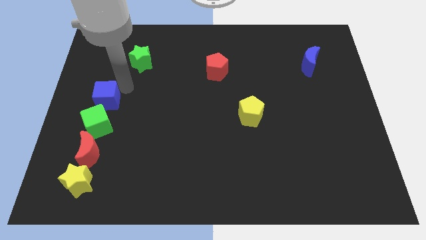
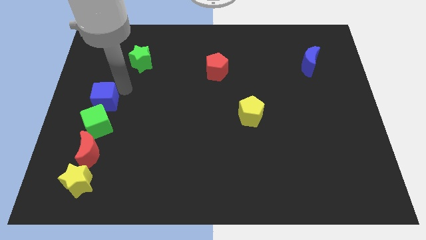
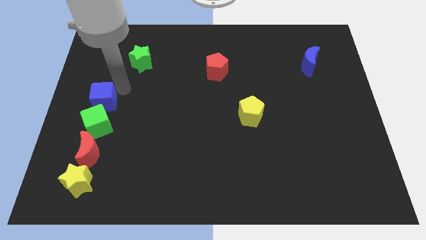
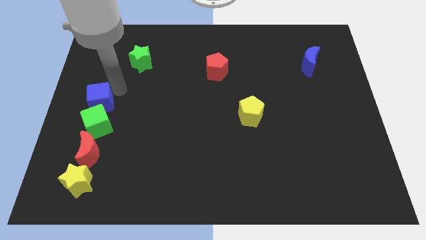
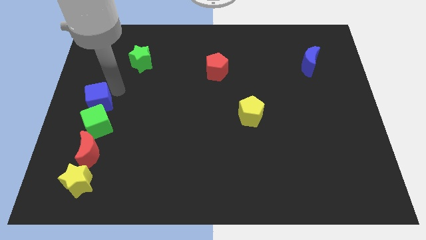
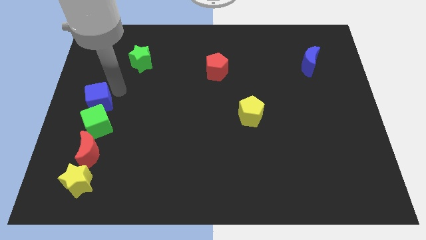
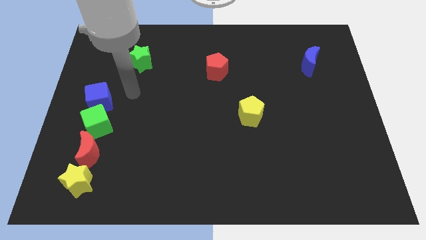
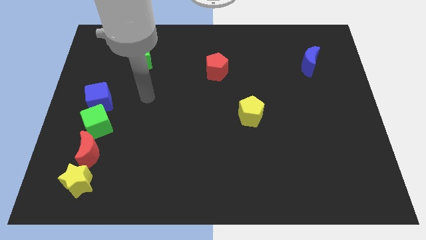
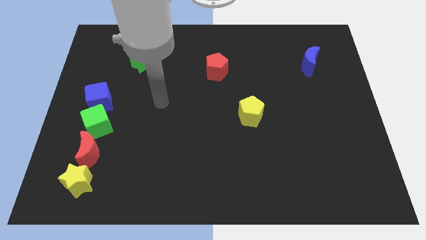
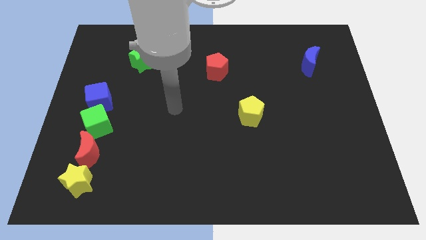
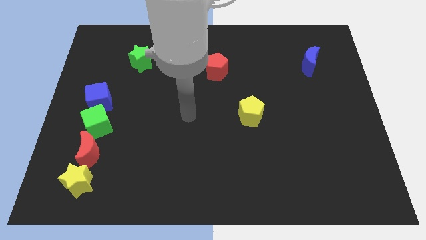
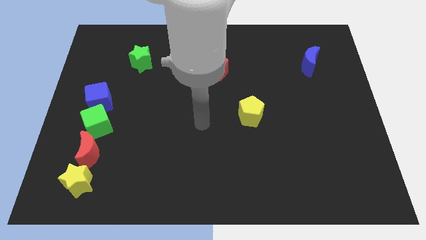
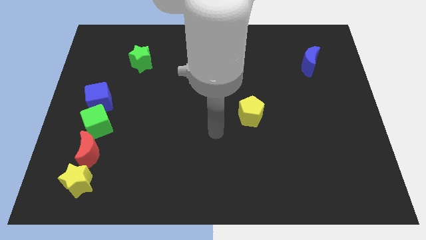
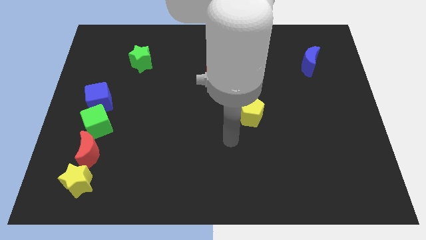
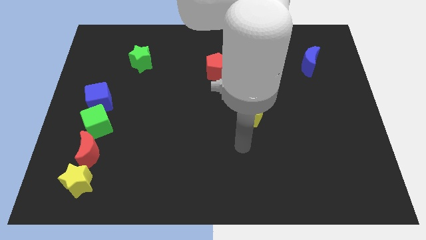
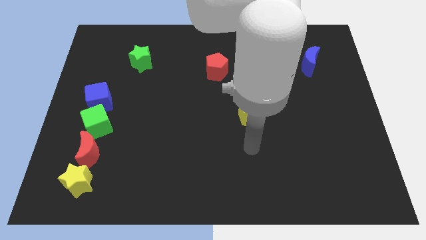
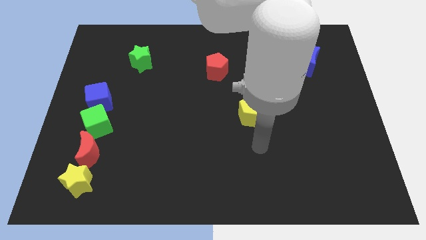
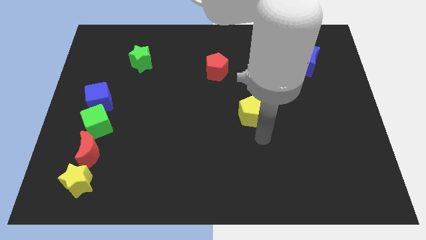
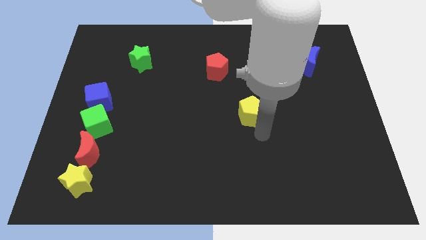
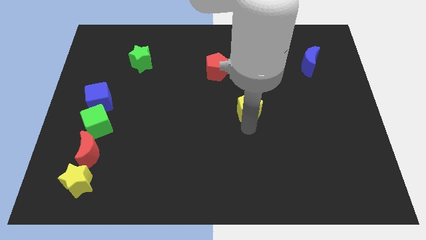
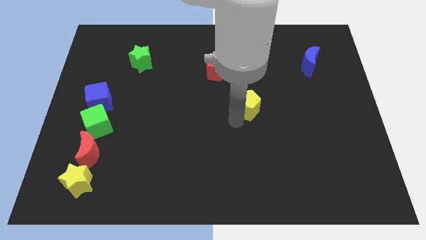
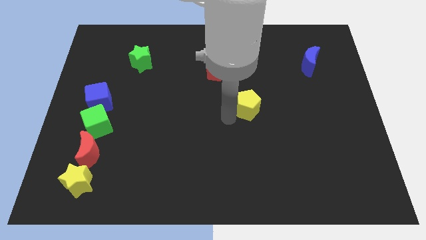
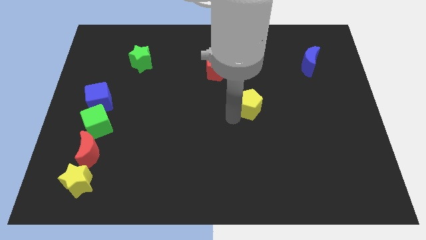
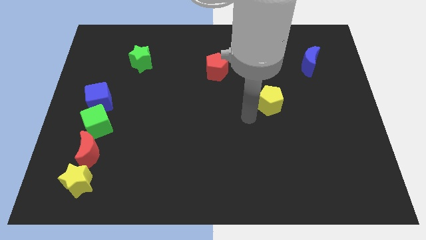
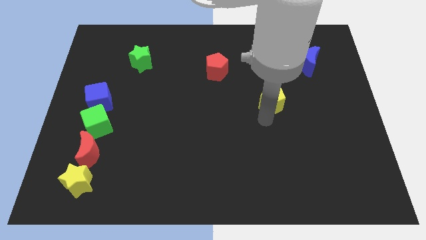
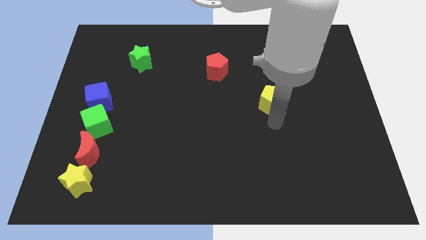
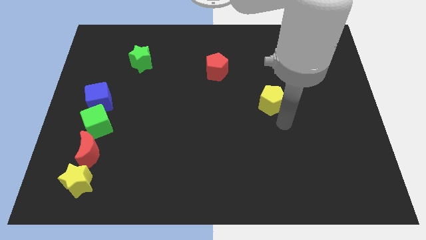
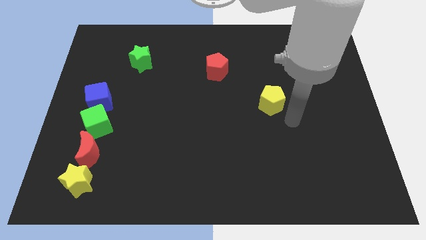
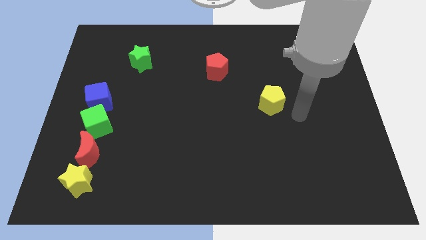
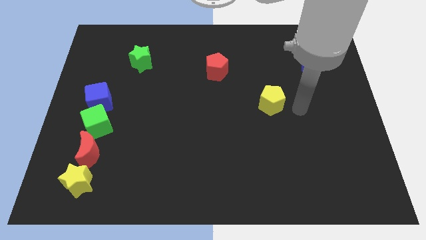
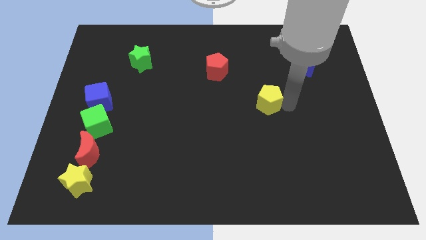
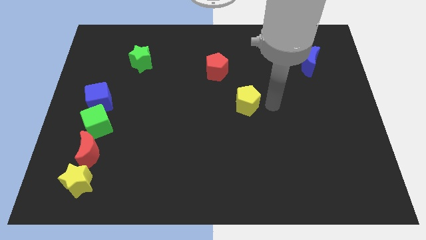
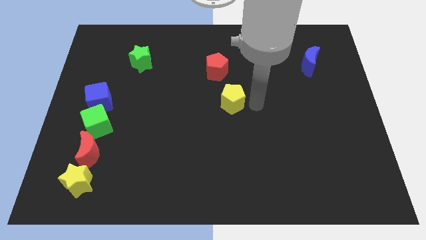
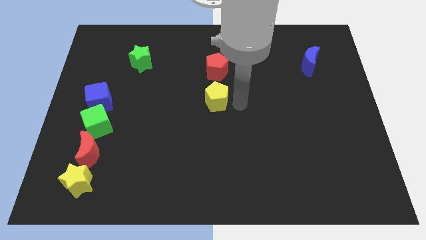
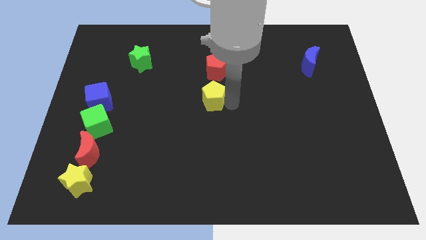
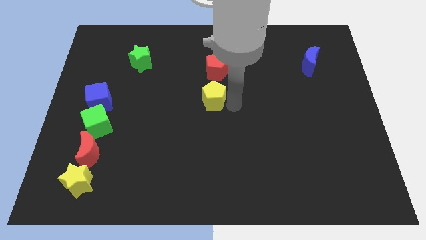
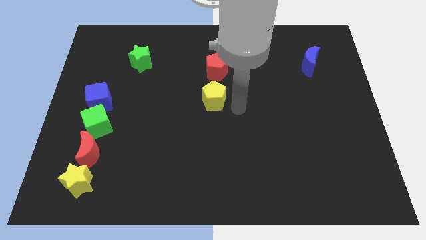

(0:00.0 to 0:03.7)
move the red pentagon to the top of the yellow pentagon

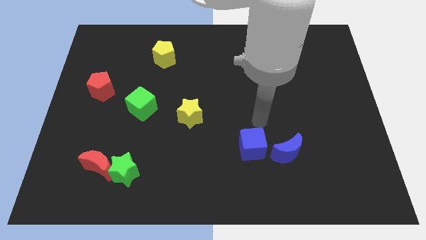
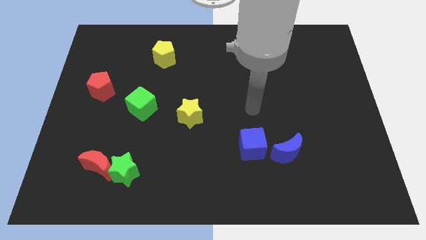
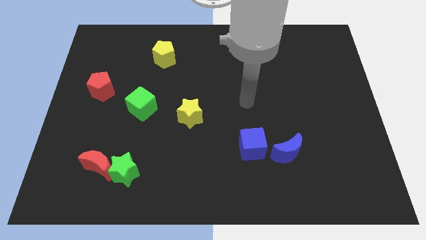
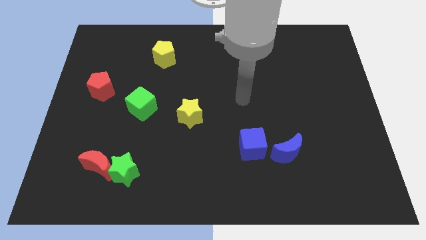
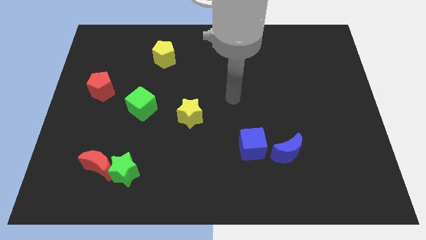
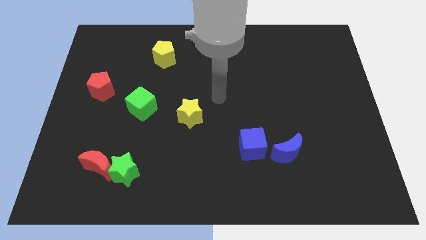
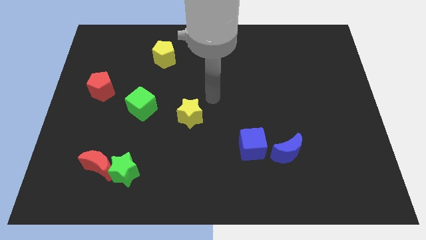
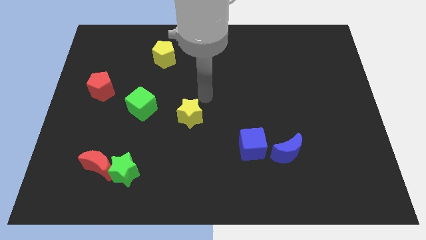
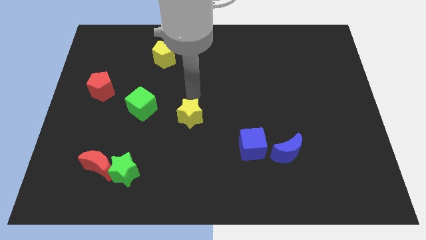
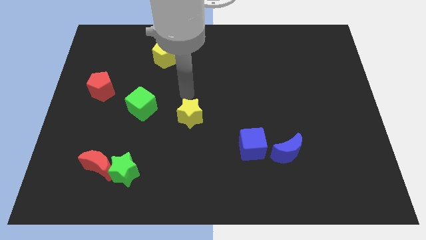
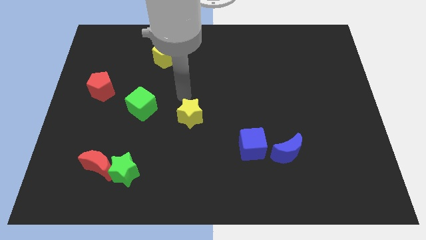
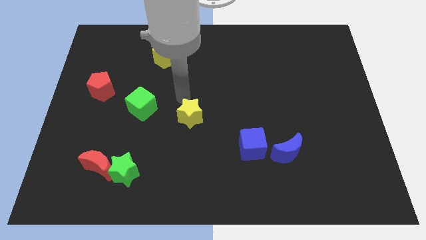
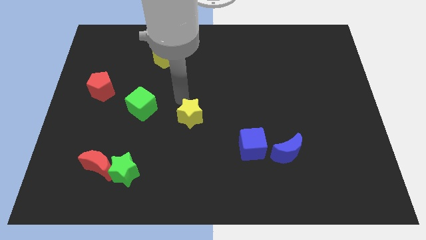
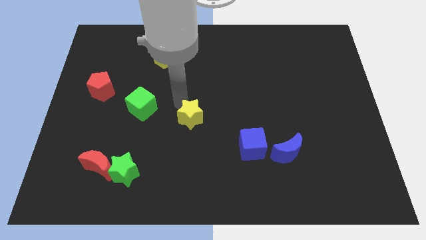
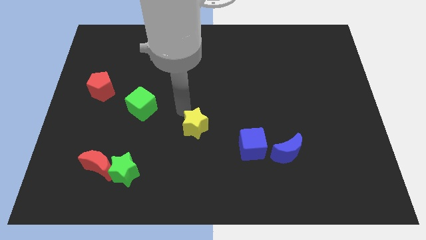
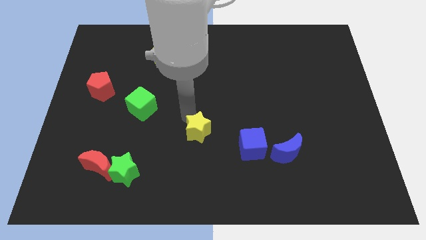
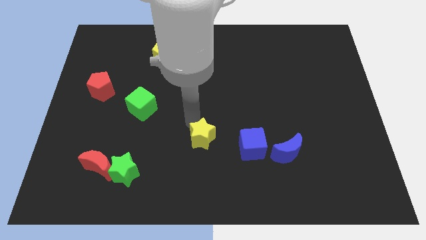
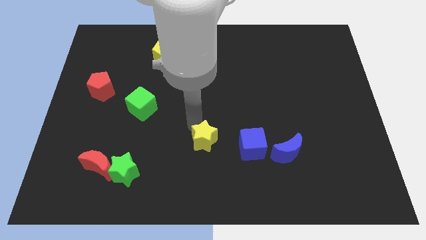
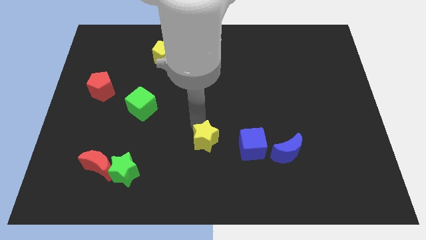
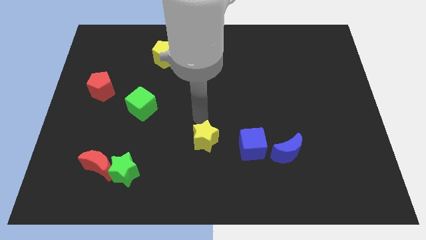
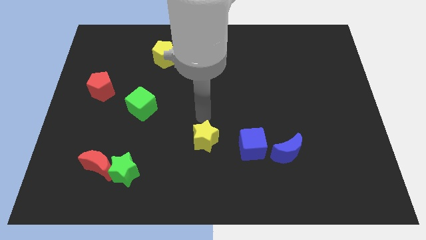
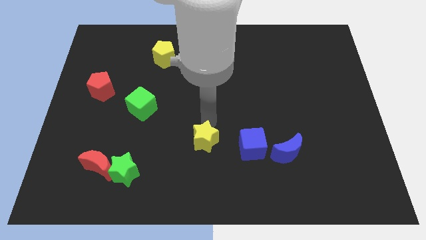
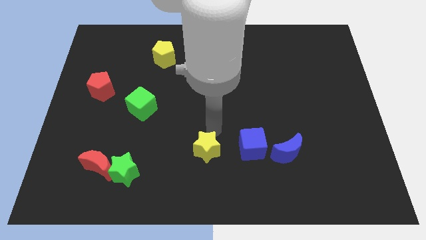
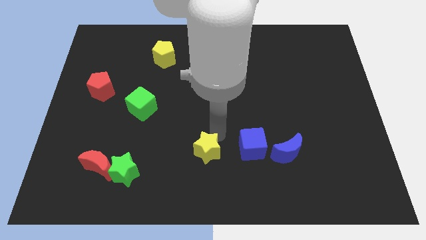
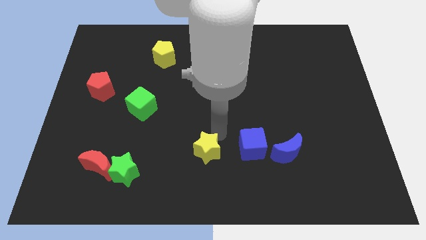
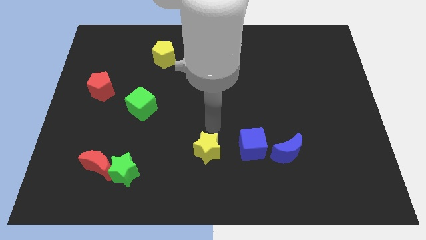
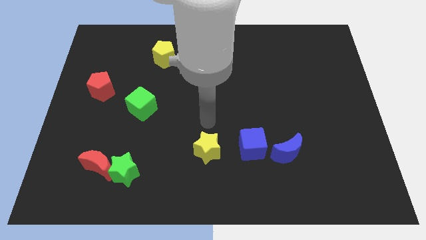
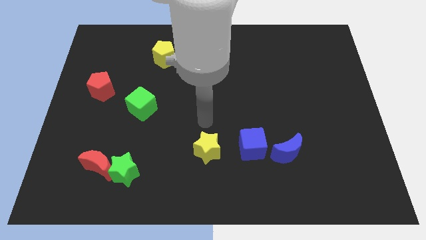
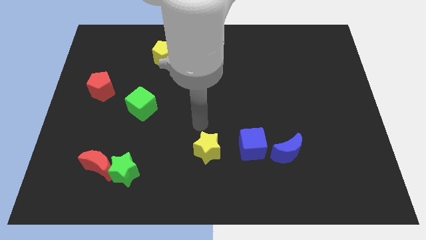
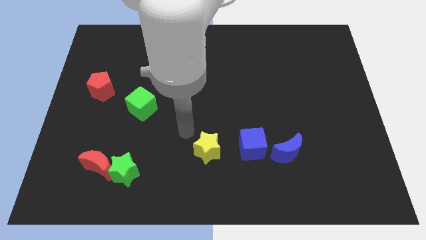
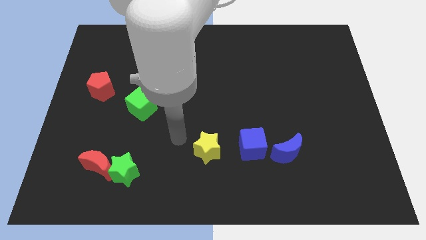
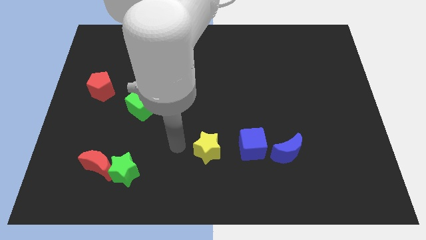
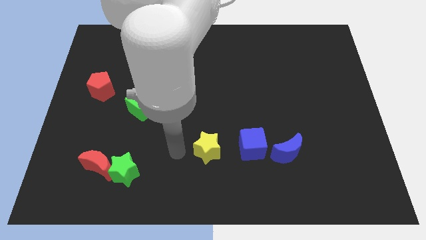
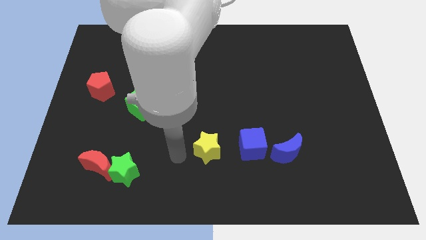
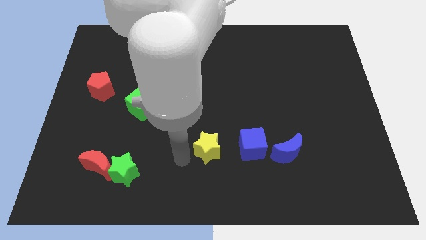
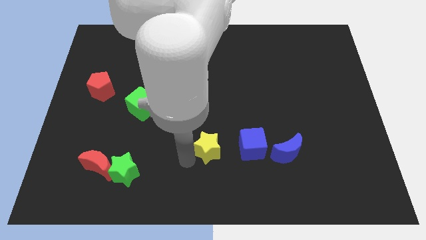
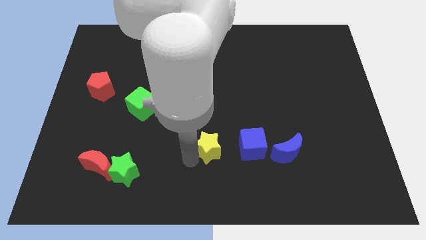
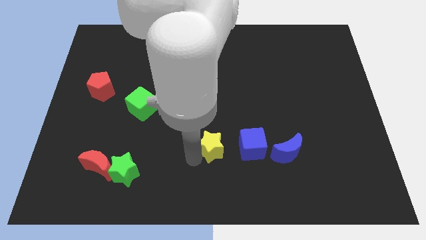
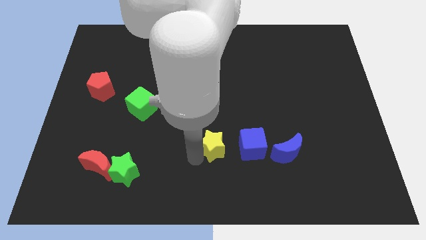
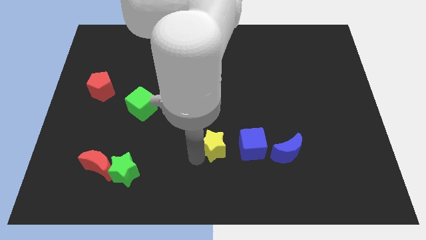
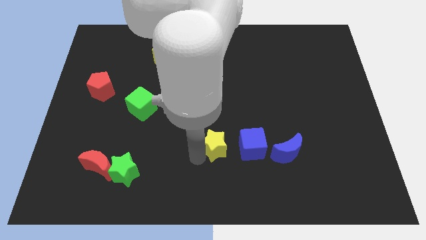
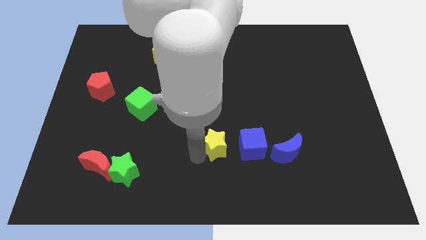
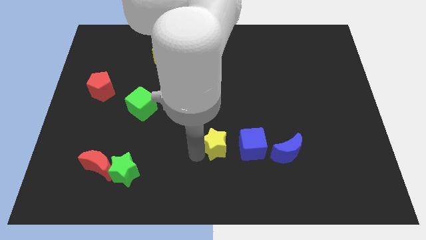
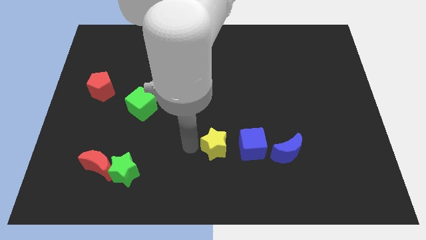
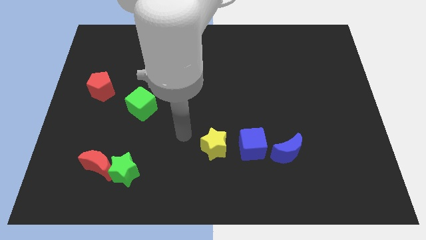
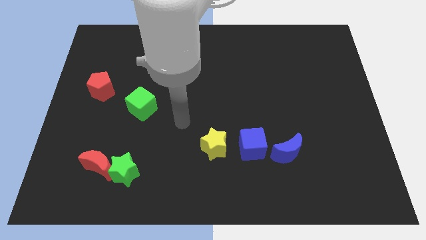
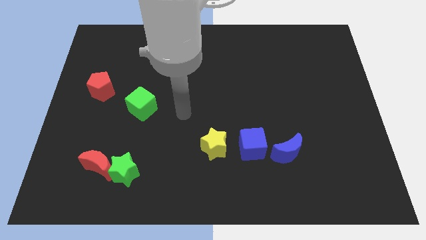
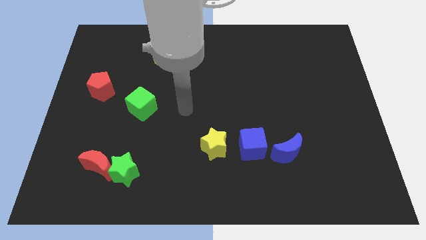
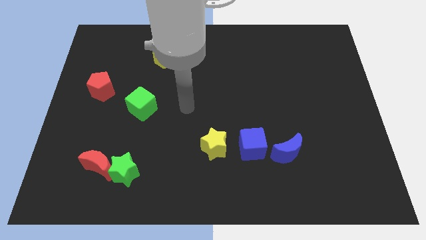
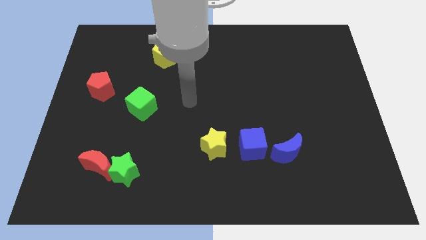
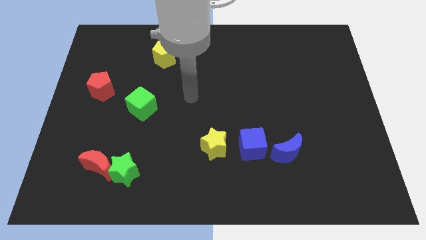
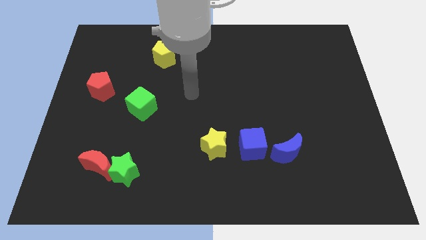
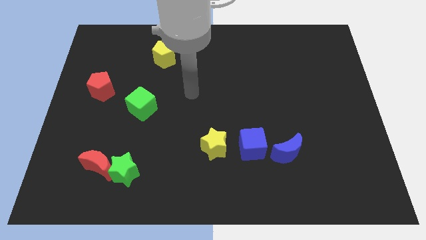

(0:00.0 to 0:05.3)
put the yellow block to the left side of the blue cube
